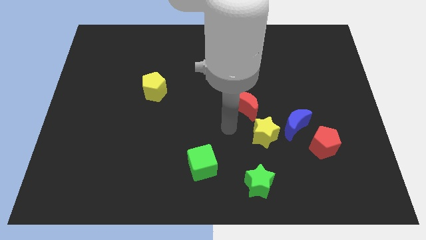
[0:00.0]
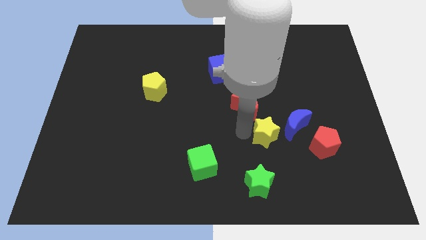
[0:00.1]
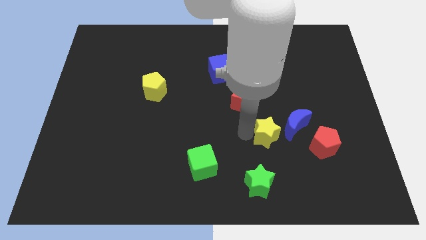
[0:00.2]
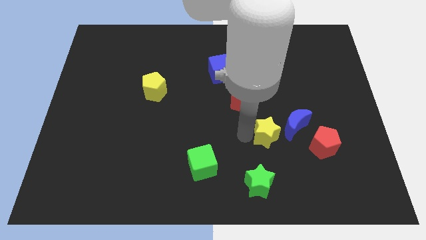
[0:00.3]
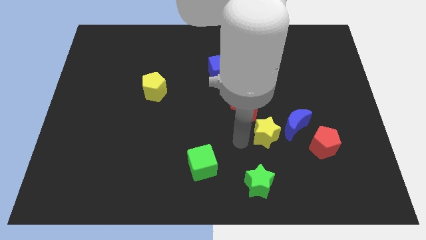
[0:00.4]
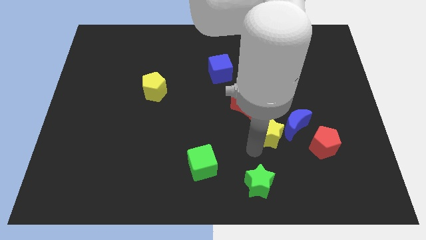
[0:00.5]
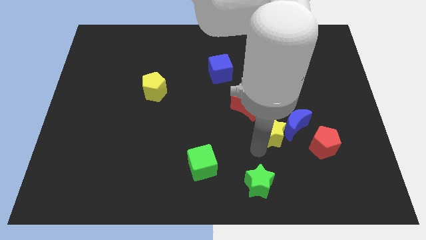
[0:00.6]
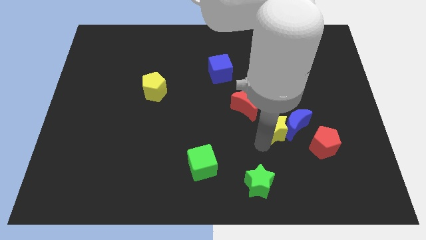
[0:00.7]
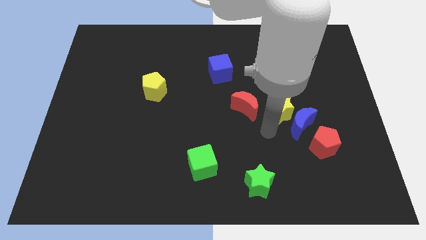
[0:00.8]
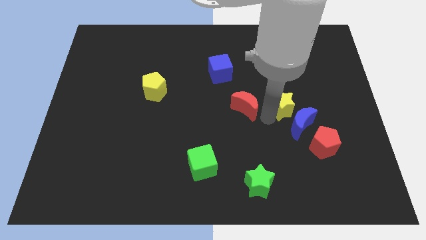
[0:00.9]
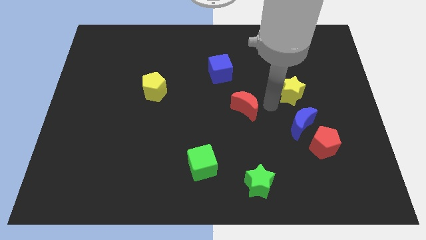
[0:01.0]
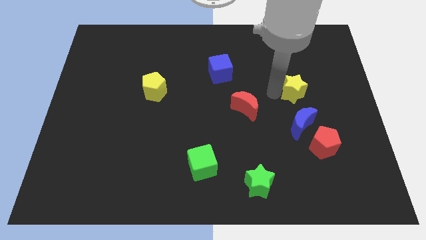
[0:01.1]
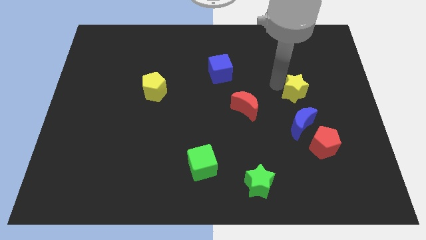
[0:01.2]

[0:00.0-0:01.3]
slide the yellow star to the top right side of the board

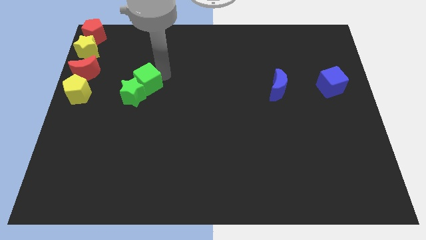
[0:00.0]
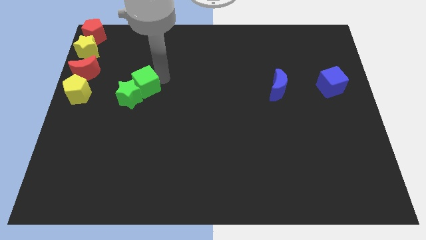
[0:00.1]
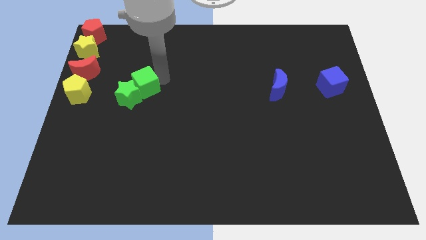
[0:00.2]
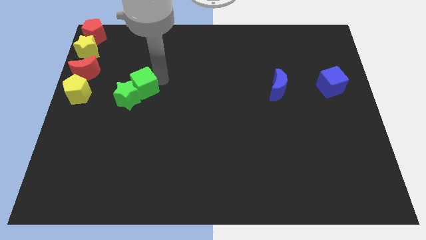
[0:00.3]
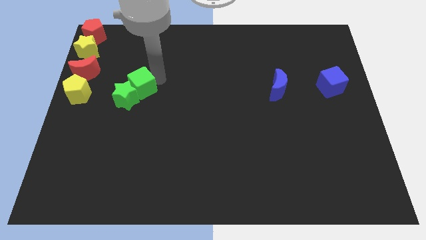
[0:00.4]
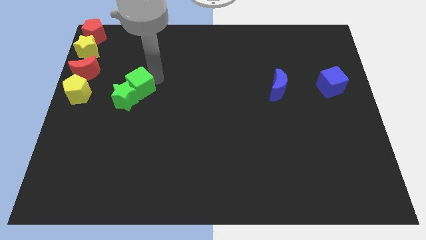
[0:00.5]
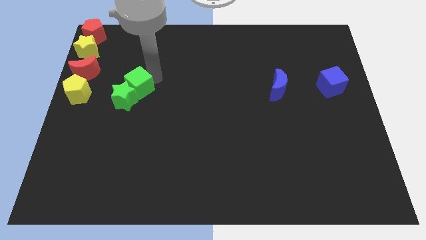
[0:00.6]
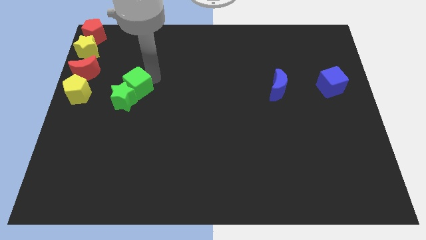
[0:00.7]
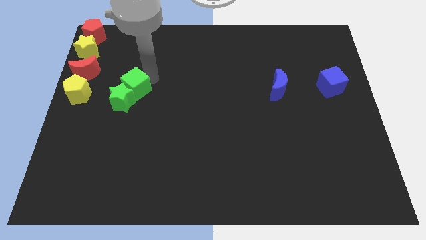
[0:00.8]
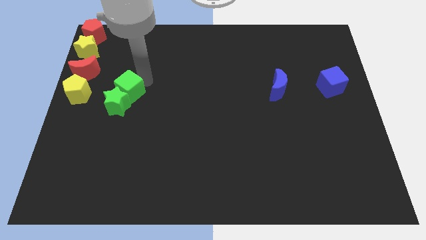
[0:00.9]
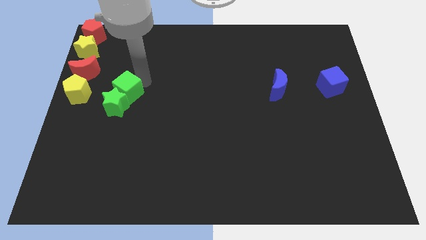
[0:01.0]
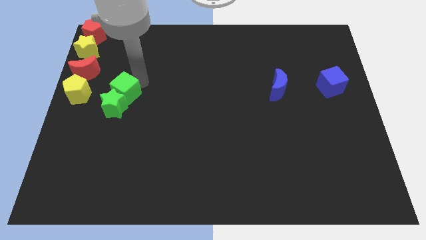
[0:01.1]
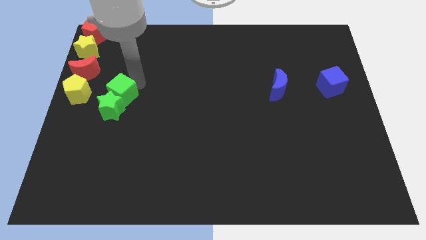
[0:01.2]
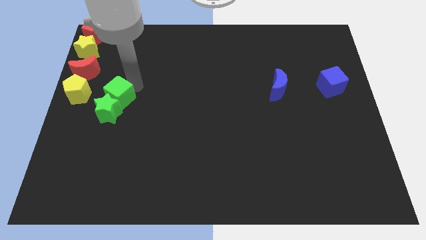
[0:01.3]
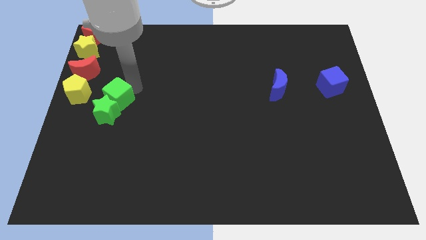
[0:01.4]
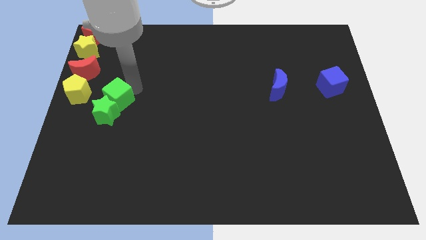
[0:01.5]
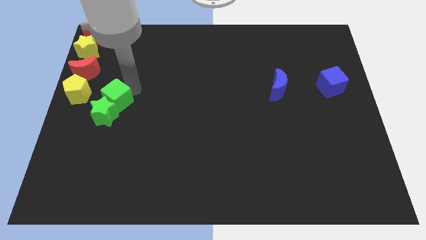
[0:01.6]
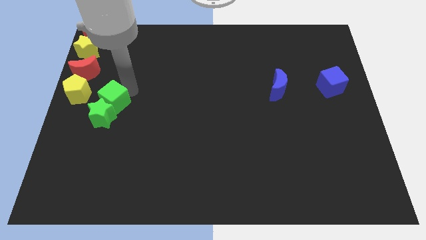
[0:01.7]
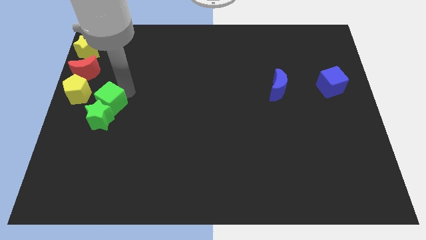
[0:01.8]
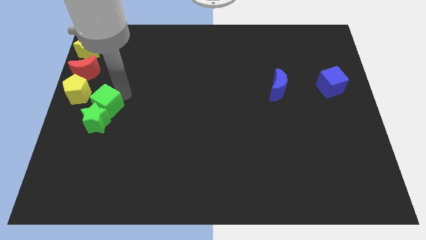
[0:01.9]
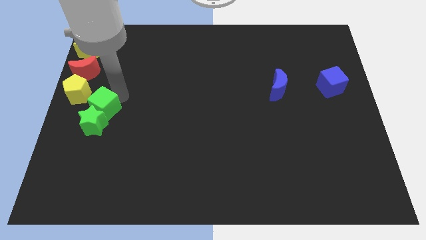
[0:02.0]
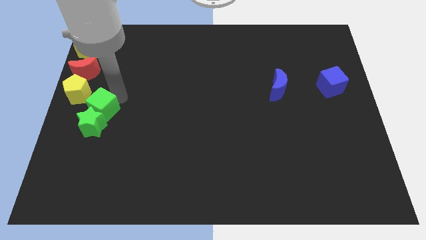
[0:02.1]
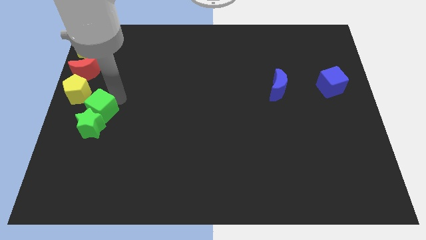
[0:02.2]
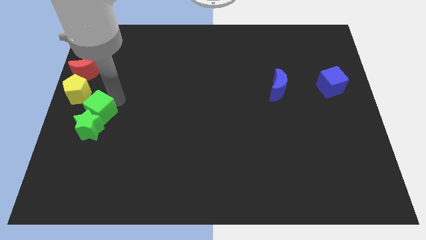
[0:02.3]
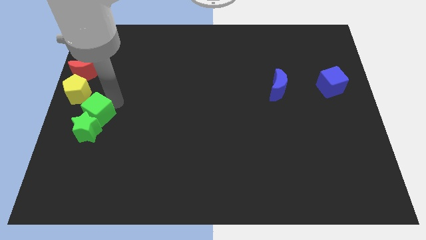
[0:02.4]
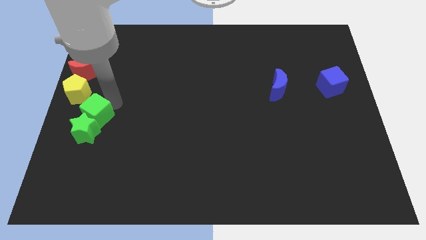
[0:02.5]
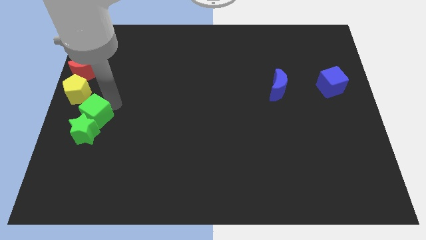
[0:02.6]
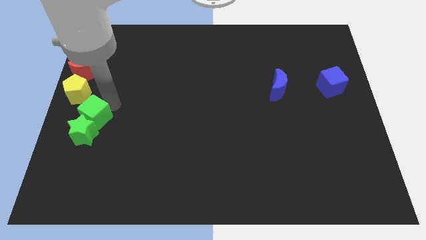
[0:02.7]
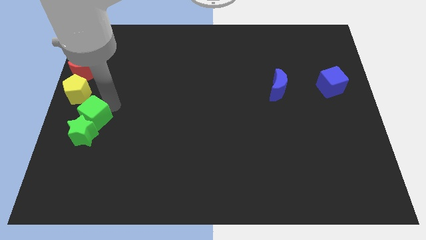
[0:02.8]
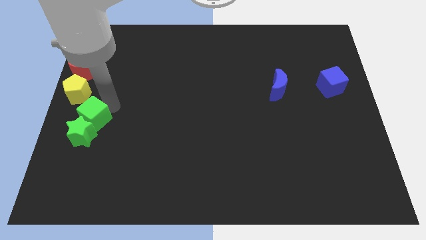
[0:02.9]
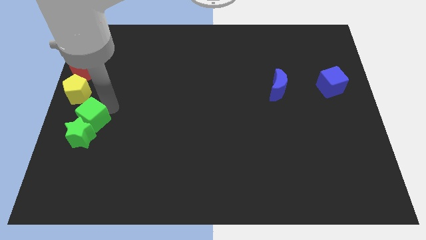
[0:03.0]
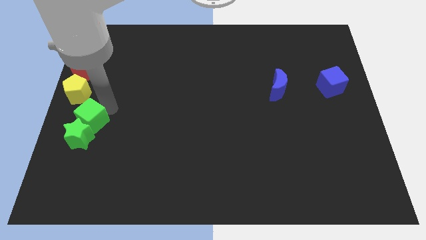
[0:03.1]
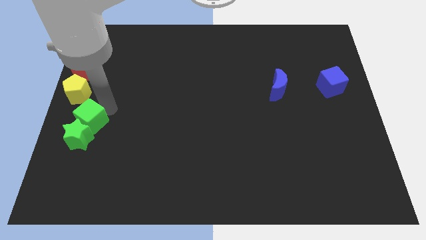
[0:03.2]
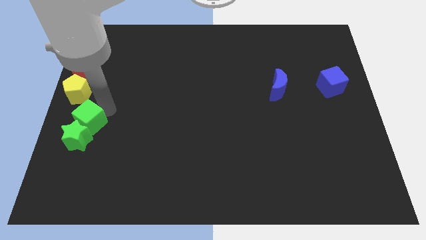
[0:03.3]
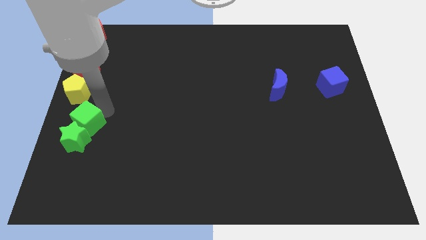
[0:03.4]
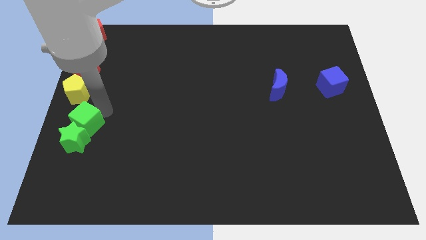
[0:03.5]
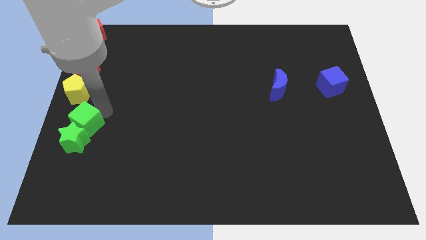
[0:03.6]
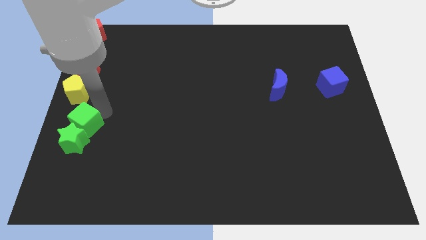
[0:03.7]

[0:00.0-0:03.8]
push the green star with green cube

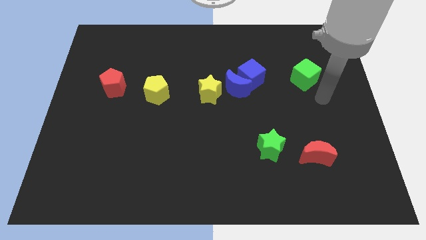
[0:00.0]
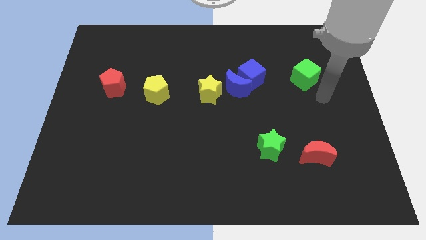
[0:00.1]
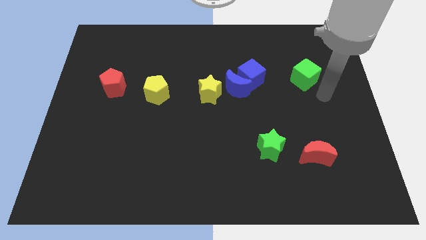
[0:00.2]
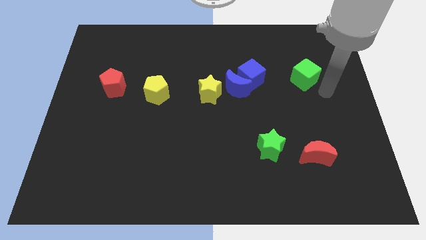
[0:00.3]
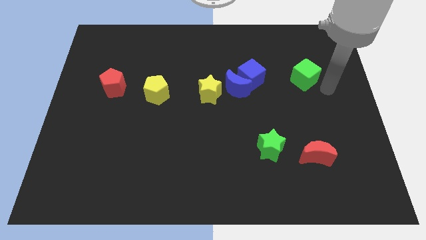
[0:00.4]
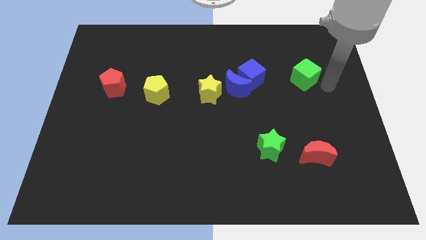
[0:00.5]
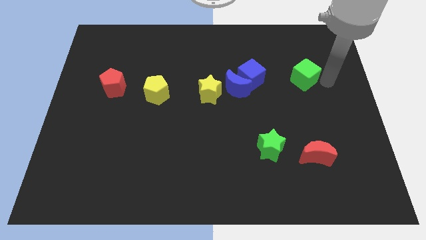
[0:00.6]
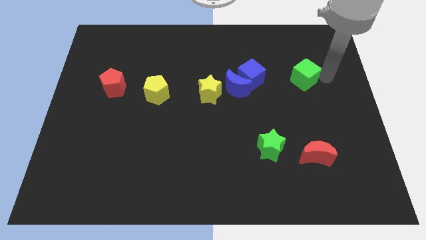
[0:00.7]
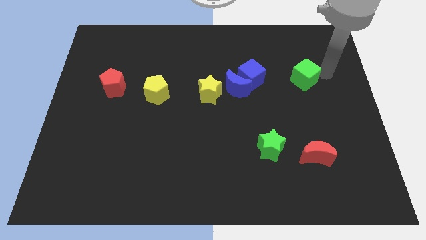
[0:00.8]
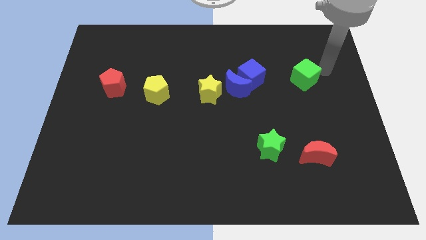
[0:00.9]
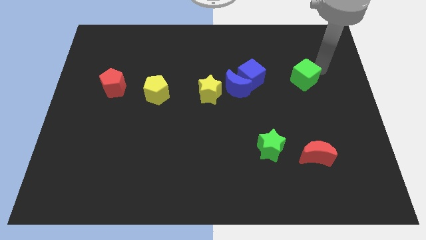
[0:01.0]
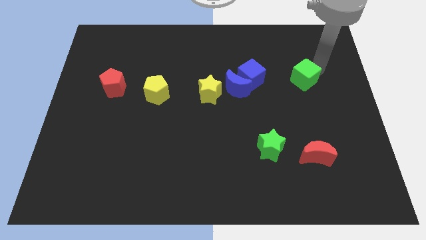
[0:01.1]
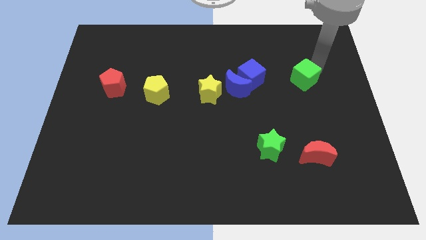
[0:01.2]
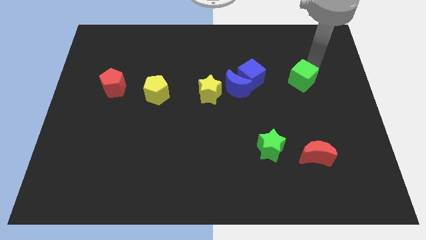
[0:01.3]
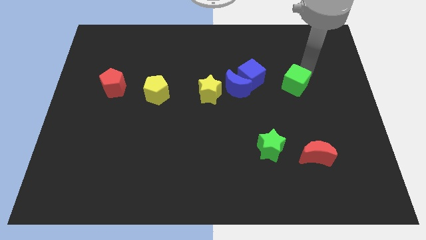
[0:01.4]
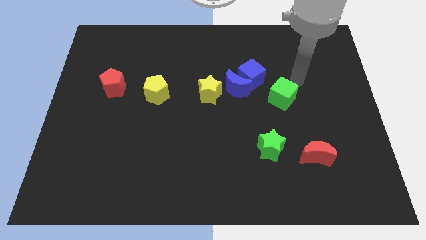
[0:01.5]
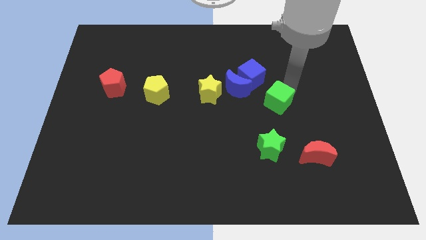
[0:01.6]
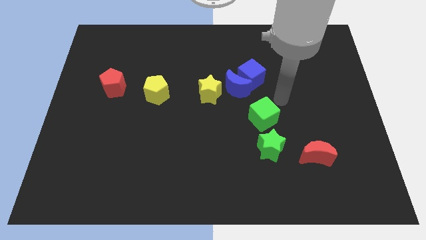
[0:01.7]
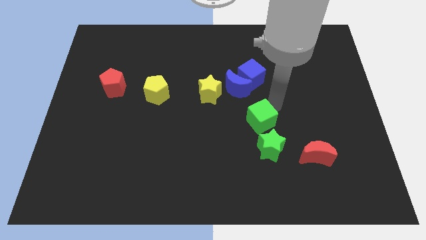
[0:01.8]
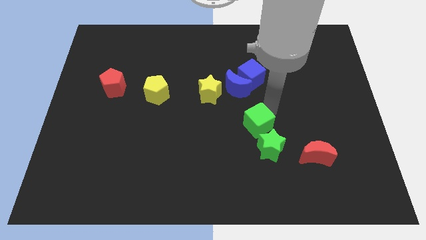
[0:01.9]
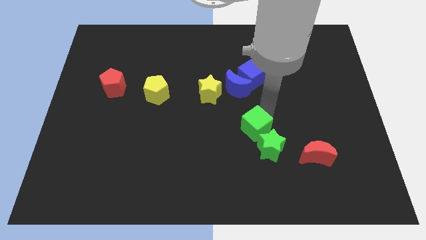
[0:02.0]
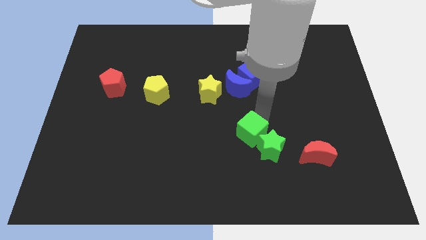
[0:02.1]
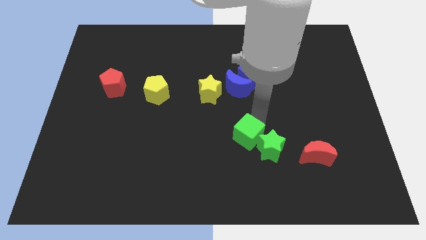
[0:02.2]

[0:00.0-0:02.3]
move the green cube above the green star diagonally

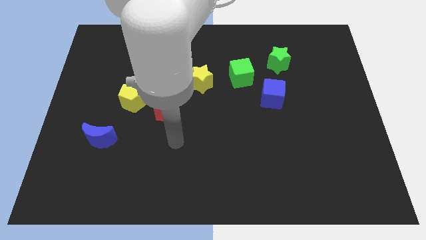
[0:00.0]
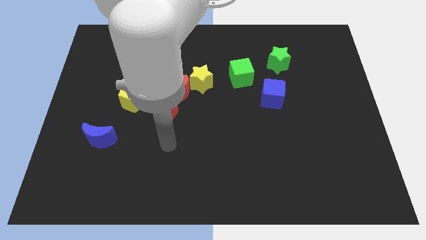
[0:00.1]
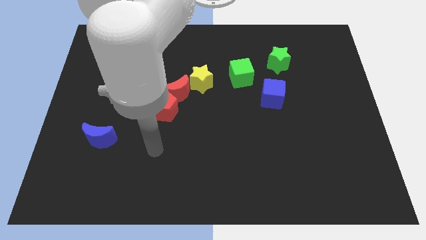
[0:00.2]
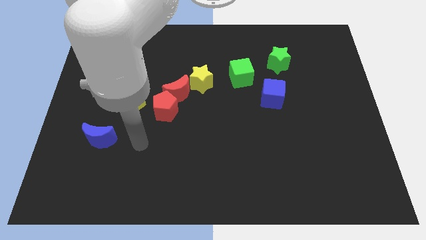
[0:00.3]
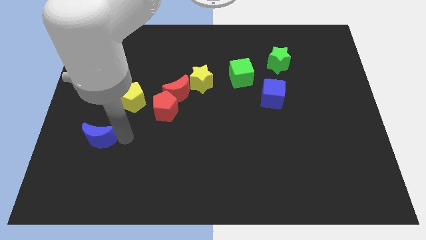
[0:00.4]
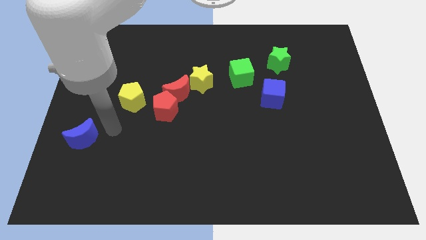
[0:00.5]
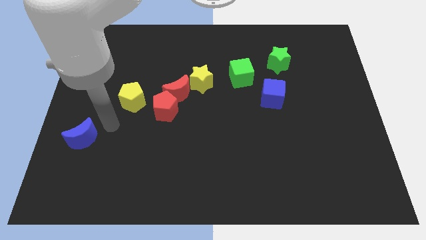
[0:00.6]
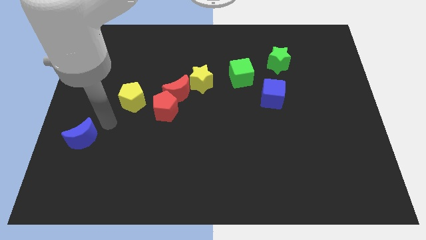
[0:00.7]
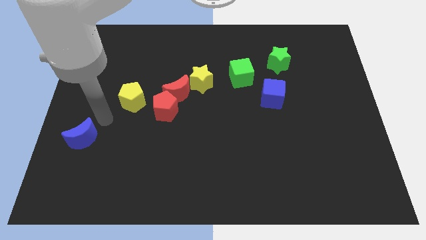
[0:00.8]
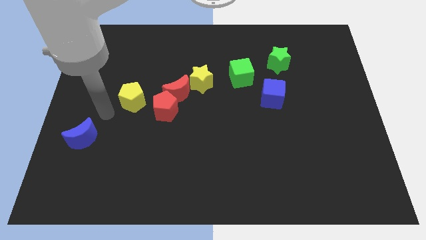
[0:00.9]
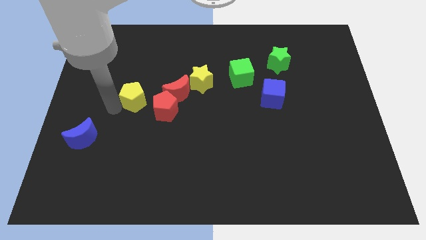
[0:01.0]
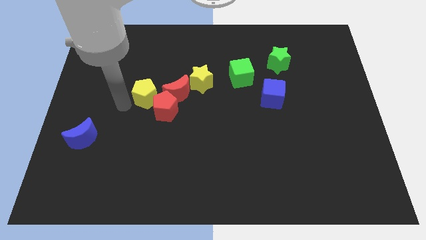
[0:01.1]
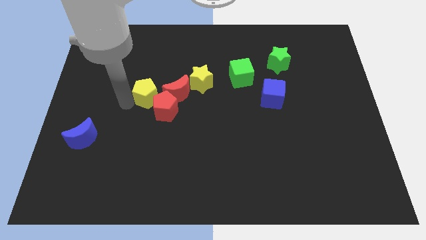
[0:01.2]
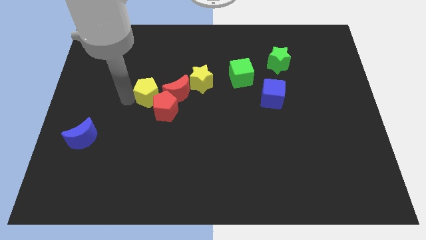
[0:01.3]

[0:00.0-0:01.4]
slightly move blue crescent

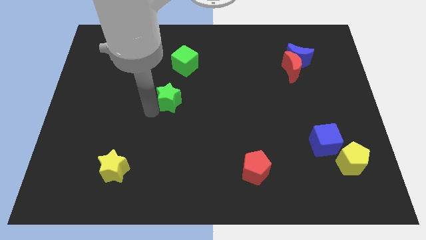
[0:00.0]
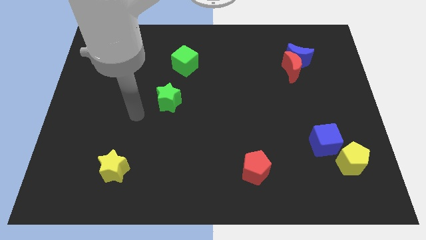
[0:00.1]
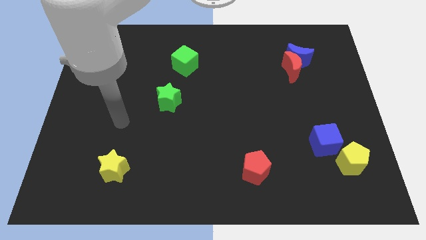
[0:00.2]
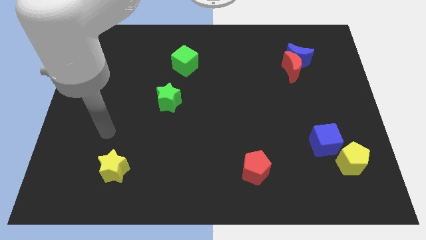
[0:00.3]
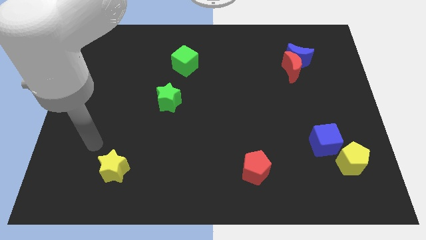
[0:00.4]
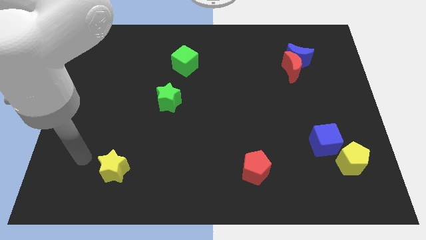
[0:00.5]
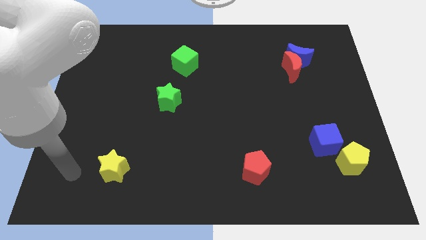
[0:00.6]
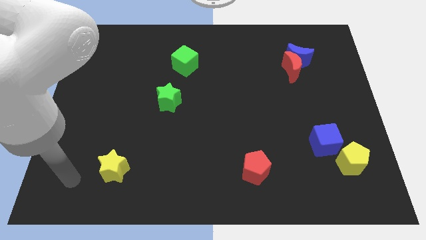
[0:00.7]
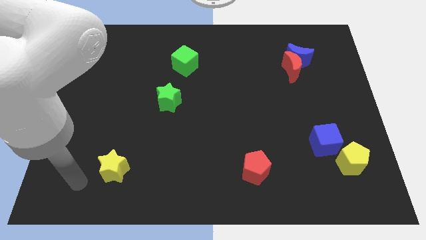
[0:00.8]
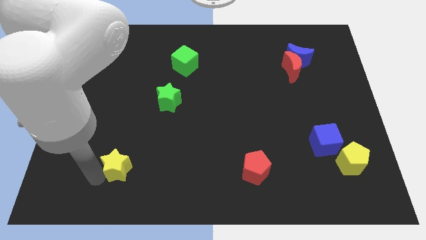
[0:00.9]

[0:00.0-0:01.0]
move your arm to the left of yellow star
